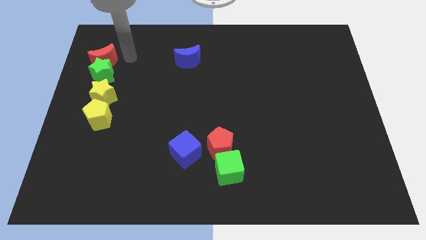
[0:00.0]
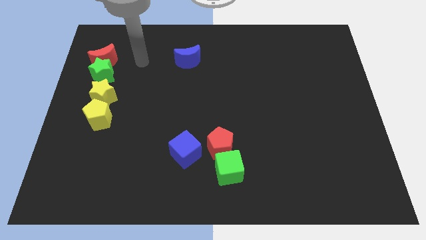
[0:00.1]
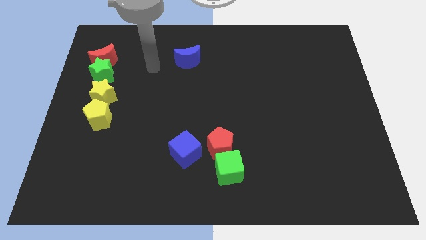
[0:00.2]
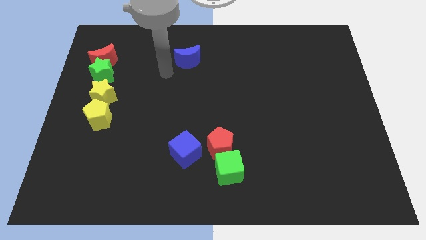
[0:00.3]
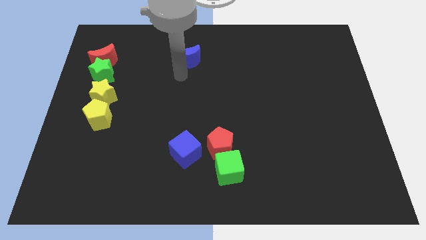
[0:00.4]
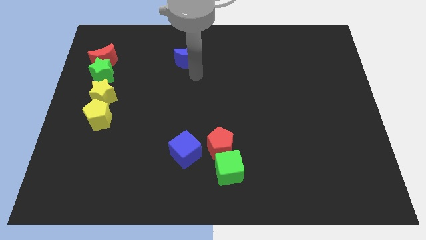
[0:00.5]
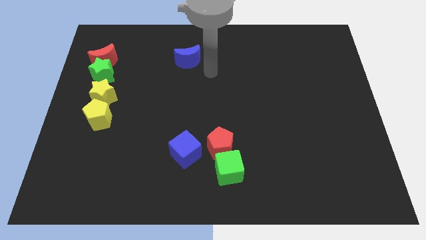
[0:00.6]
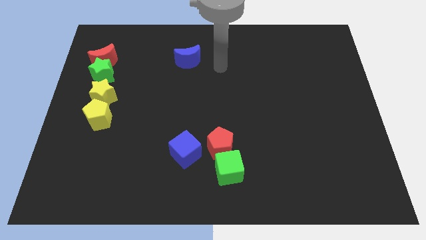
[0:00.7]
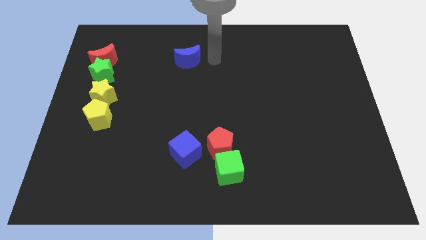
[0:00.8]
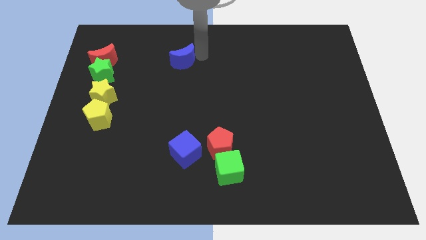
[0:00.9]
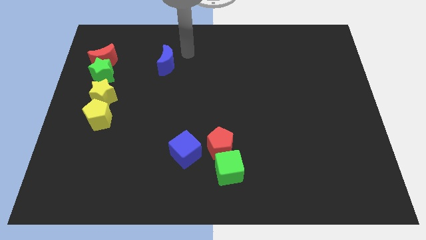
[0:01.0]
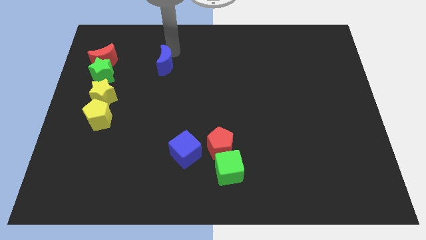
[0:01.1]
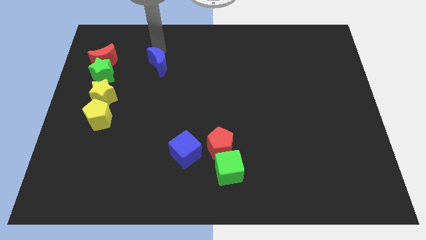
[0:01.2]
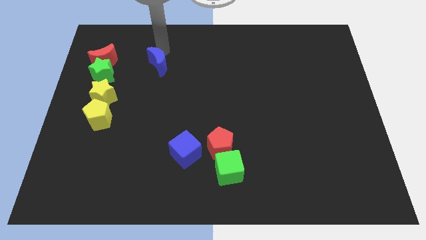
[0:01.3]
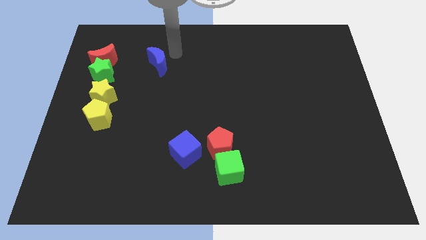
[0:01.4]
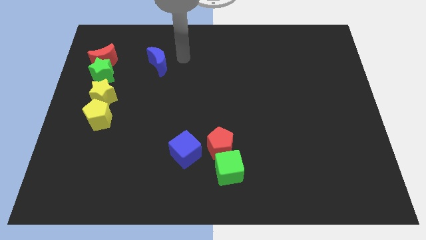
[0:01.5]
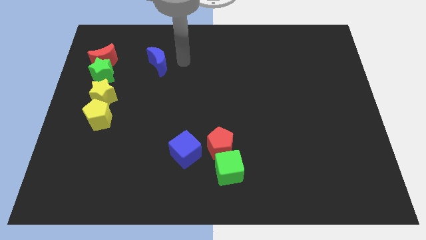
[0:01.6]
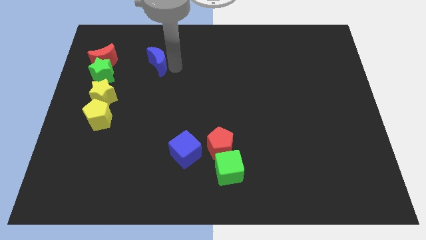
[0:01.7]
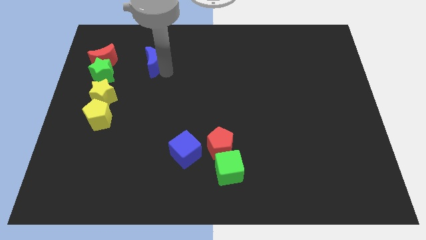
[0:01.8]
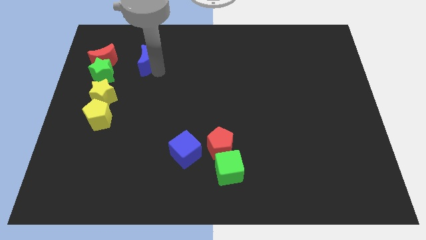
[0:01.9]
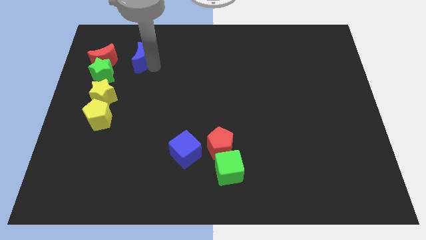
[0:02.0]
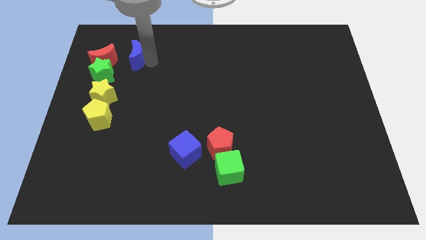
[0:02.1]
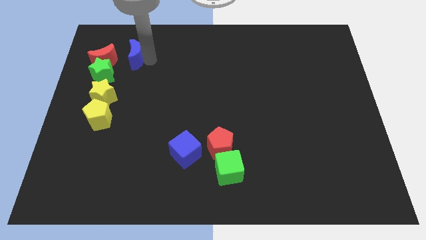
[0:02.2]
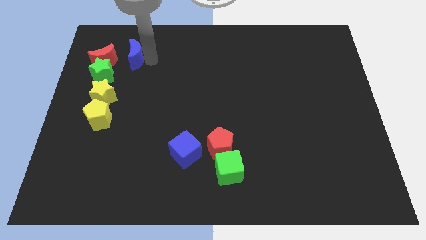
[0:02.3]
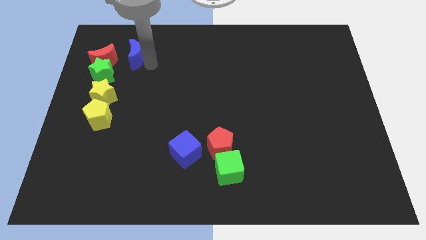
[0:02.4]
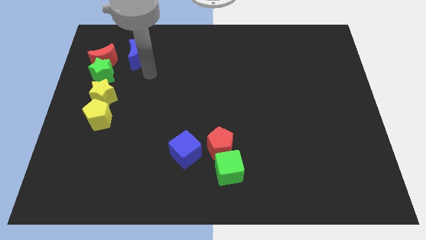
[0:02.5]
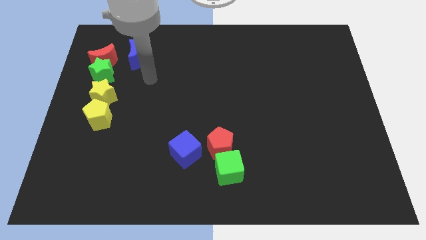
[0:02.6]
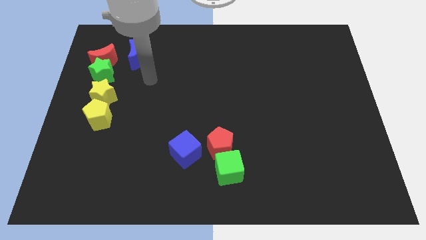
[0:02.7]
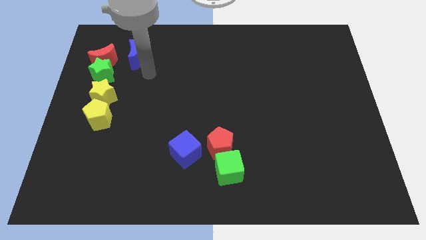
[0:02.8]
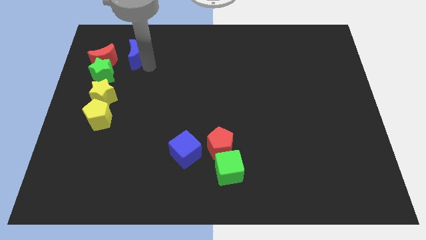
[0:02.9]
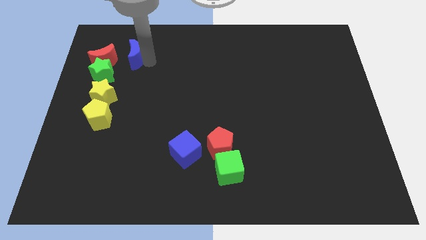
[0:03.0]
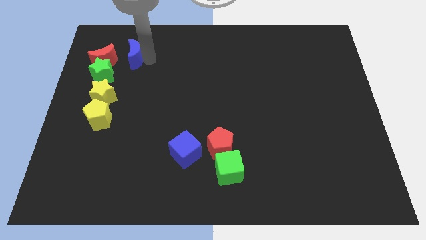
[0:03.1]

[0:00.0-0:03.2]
move the blue crescent to the right of the red moon

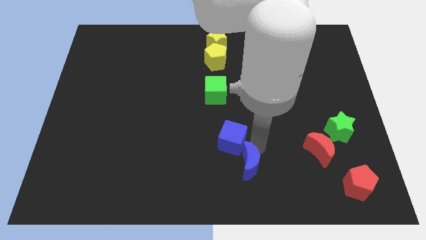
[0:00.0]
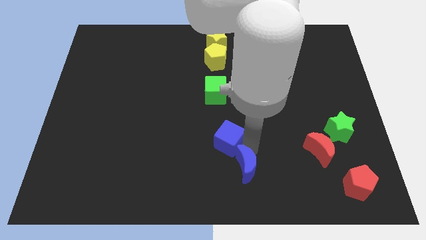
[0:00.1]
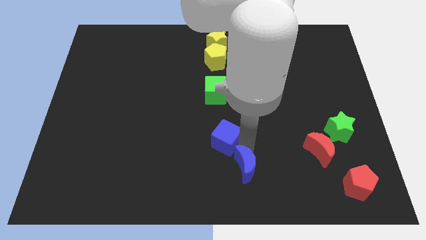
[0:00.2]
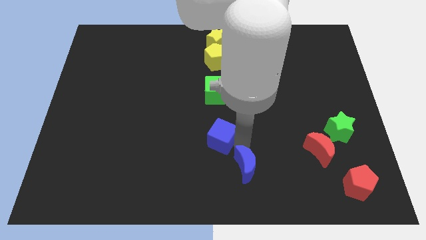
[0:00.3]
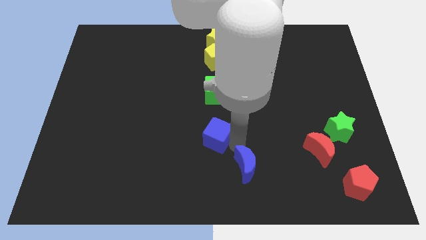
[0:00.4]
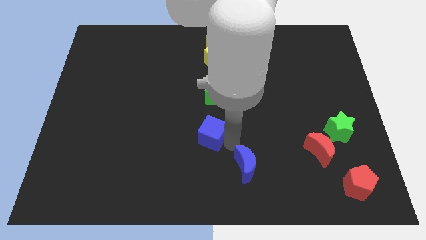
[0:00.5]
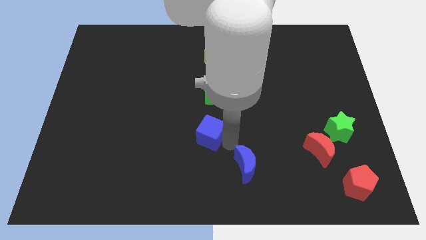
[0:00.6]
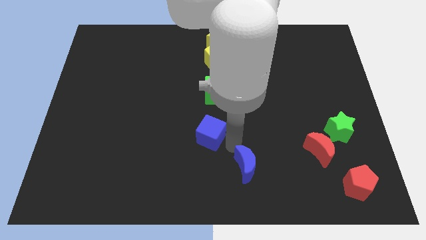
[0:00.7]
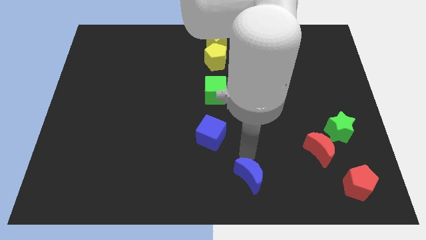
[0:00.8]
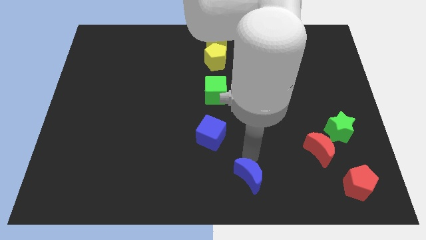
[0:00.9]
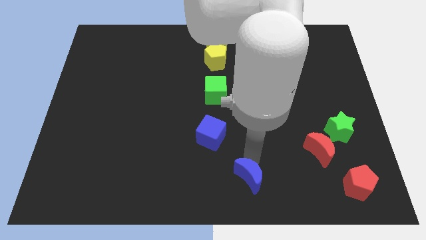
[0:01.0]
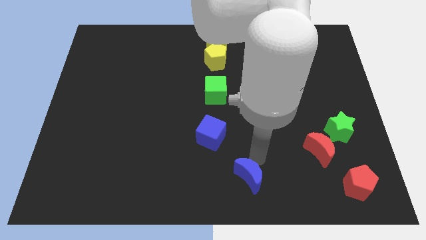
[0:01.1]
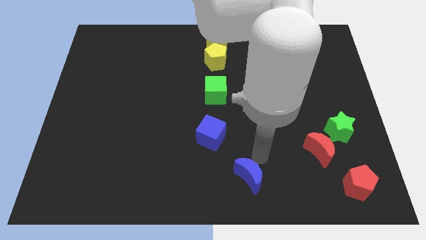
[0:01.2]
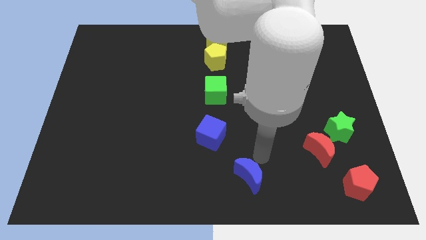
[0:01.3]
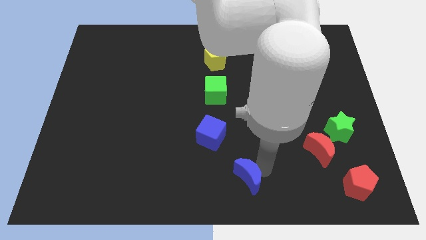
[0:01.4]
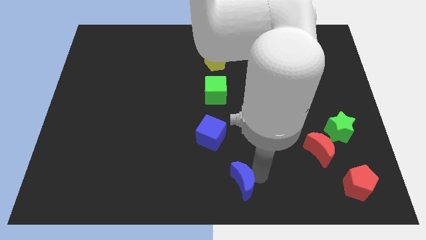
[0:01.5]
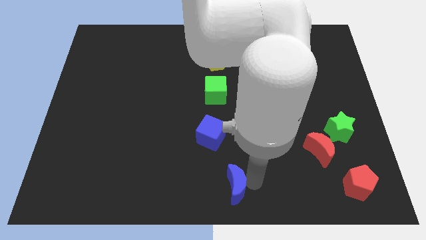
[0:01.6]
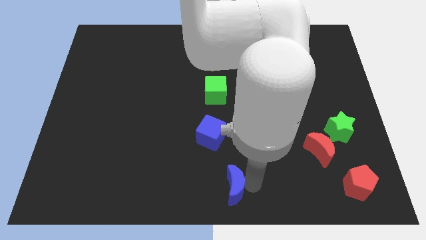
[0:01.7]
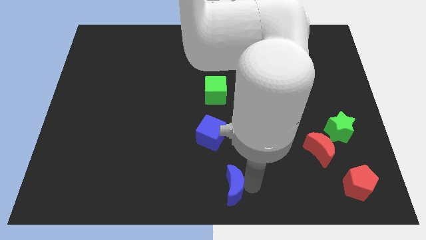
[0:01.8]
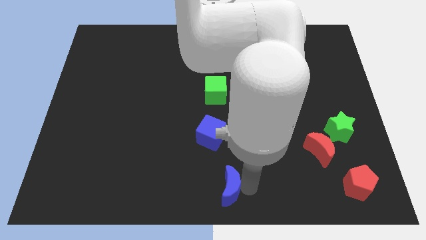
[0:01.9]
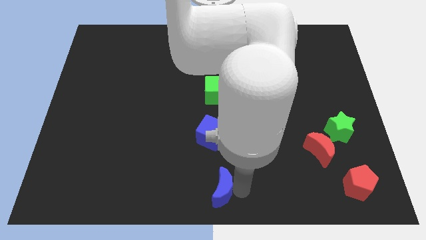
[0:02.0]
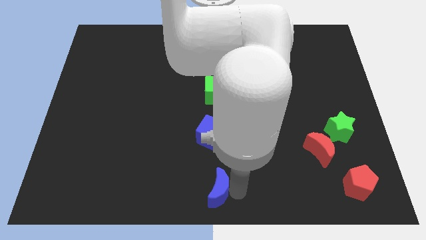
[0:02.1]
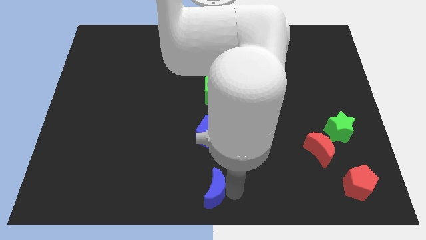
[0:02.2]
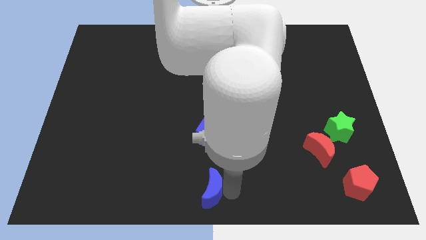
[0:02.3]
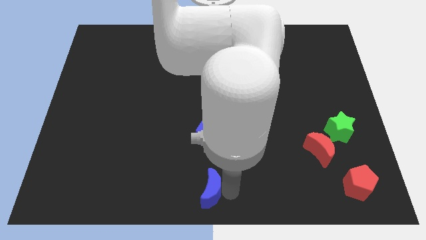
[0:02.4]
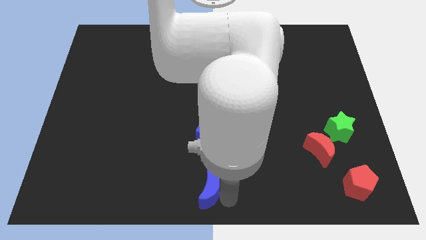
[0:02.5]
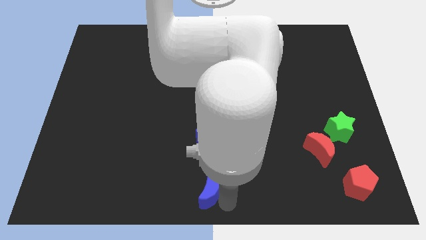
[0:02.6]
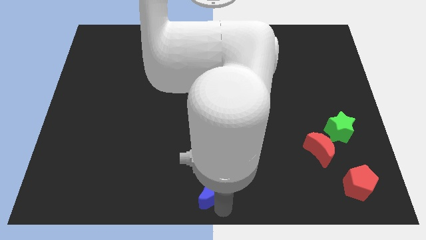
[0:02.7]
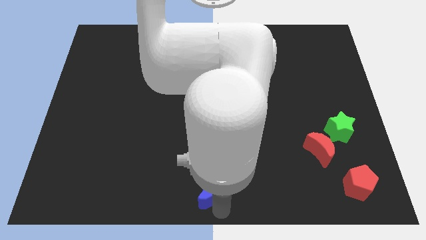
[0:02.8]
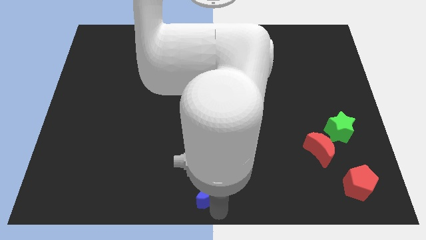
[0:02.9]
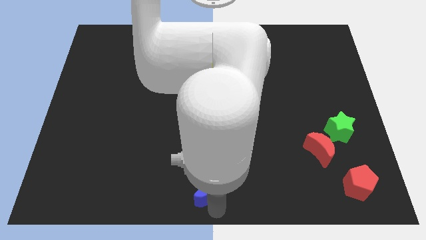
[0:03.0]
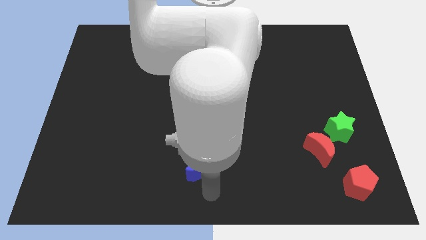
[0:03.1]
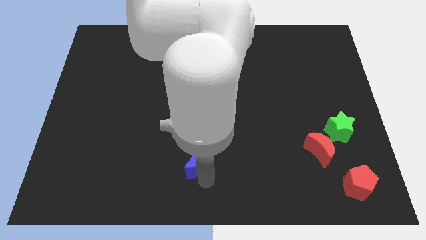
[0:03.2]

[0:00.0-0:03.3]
put the blue moon vertically below the blue cube

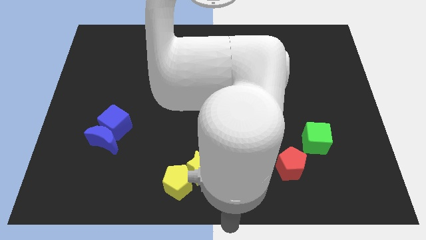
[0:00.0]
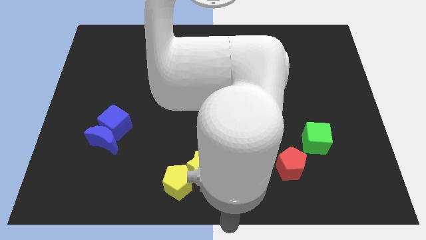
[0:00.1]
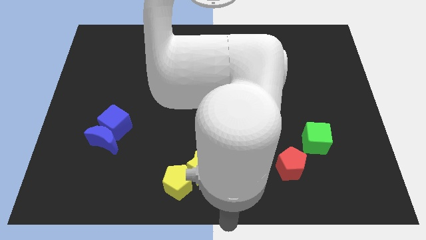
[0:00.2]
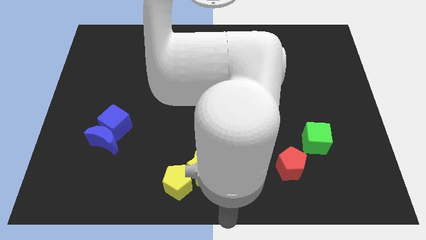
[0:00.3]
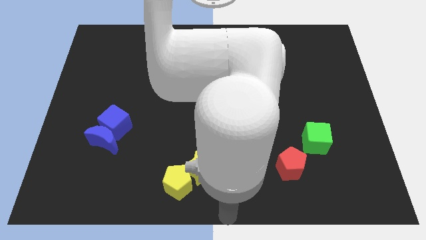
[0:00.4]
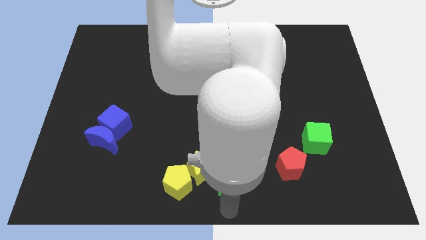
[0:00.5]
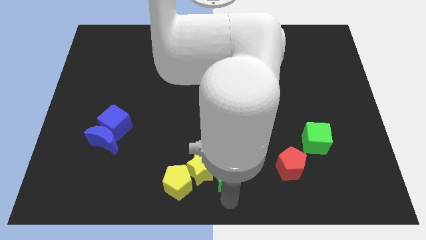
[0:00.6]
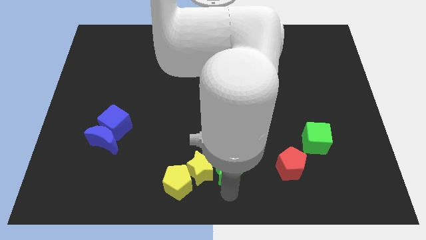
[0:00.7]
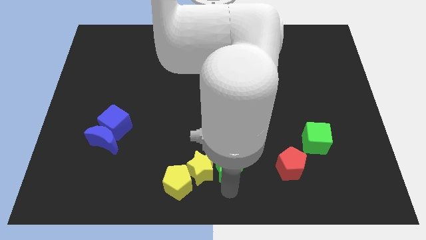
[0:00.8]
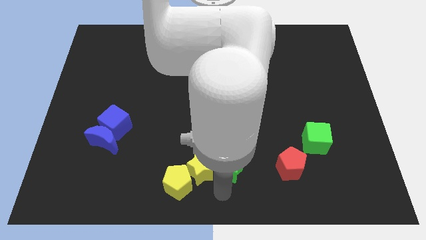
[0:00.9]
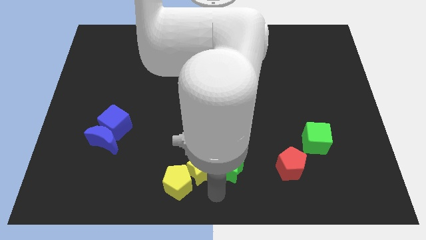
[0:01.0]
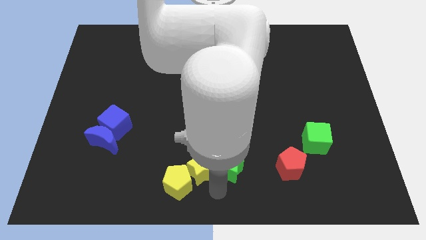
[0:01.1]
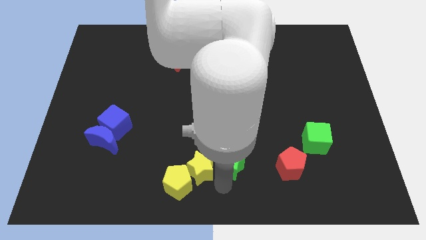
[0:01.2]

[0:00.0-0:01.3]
push the green star beside the yellow star

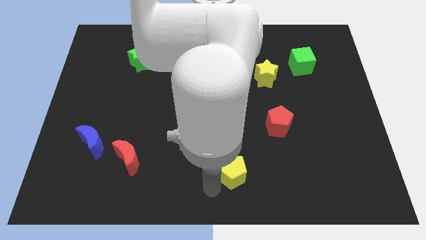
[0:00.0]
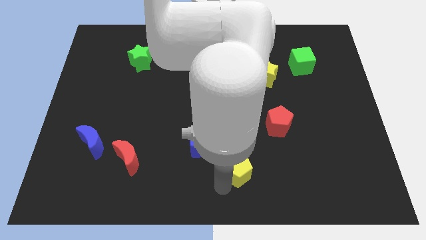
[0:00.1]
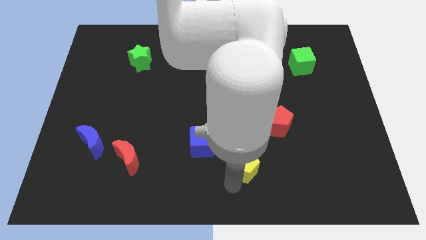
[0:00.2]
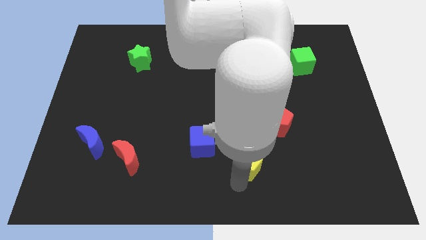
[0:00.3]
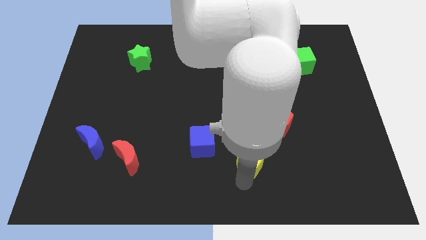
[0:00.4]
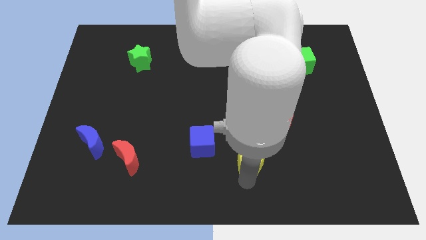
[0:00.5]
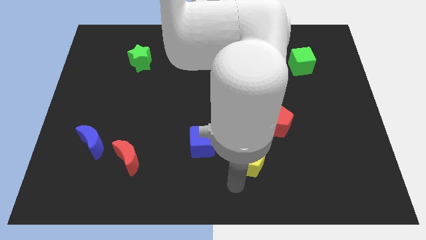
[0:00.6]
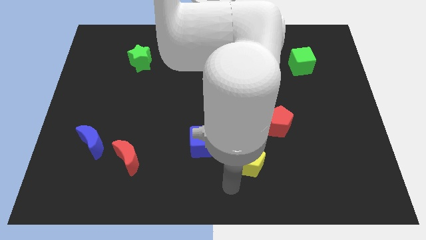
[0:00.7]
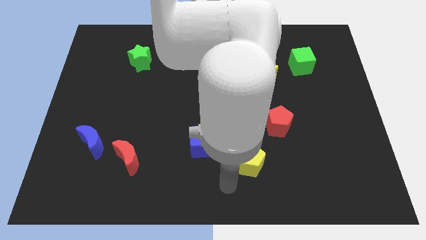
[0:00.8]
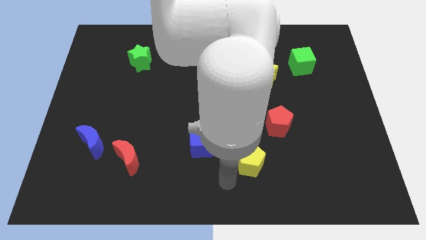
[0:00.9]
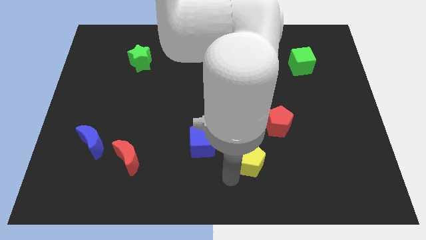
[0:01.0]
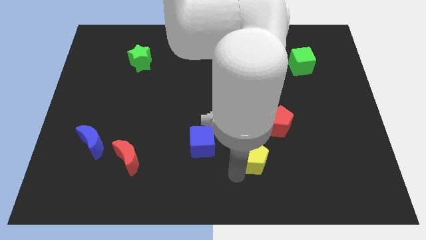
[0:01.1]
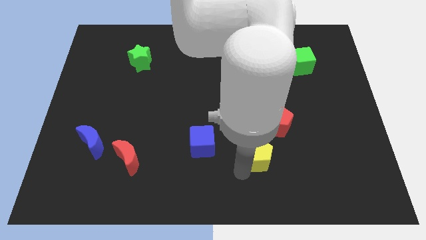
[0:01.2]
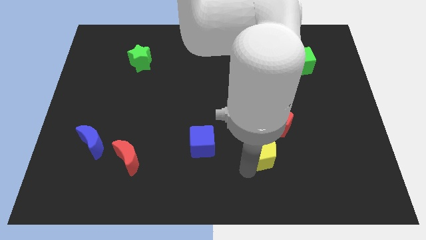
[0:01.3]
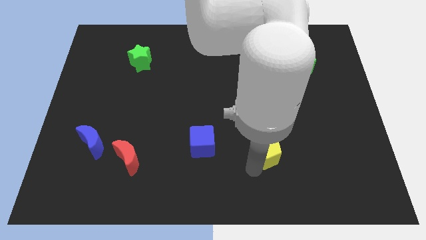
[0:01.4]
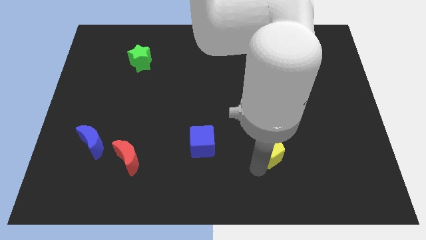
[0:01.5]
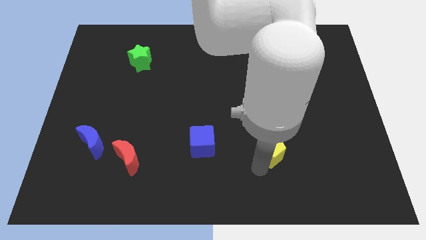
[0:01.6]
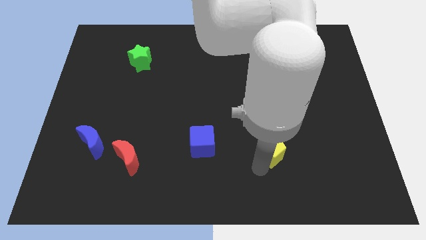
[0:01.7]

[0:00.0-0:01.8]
place yellow pentagon below red pentagon
